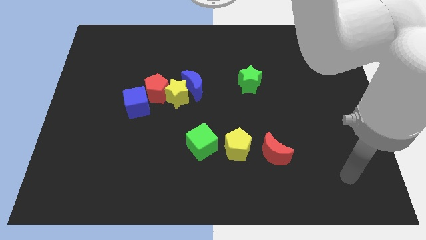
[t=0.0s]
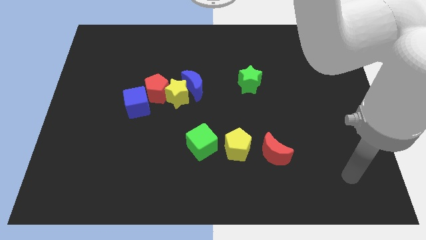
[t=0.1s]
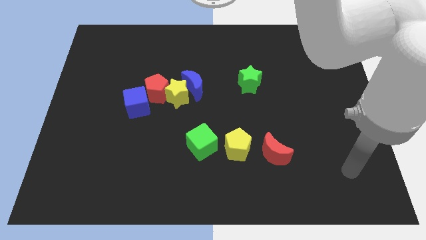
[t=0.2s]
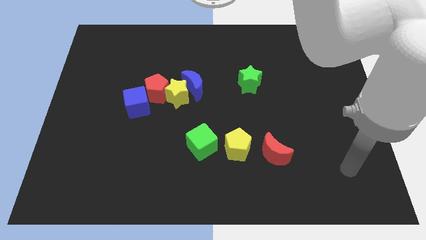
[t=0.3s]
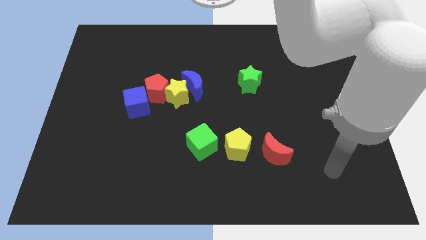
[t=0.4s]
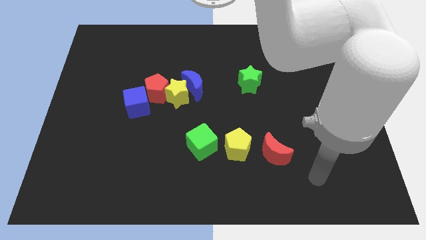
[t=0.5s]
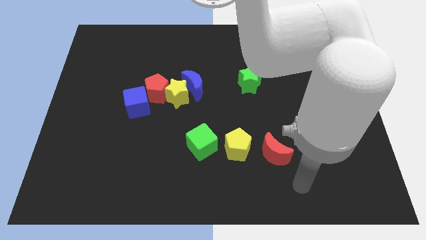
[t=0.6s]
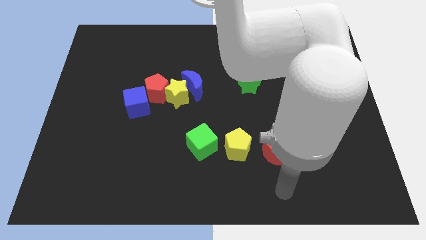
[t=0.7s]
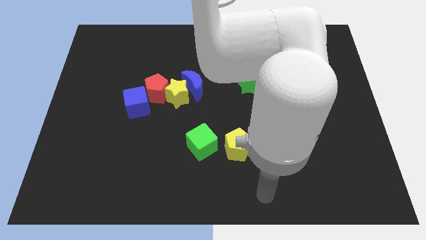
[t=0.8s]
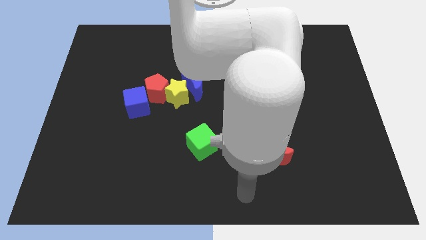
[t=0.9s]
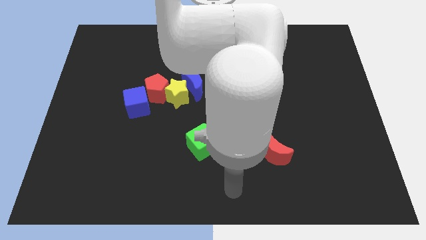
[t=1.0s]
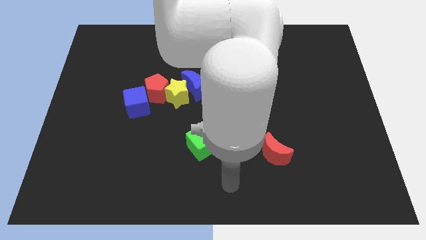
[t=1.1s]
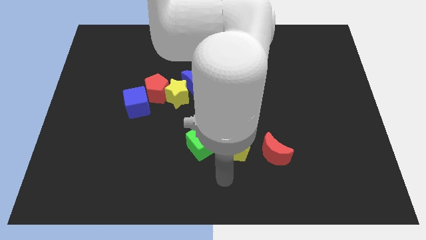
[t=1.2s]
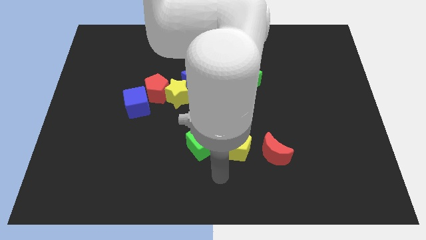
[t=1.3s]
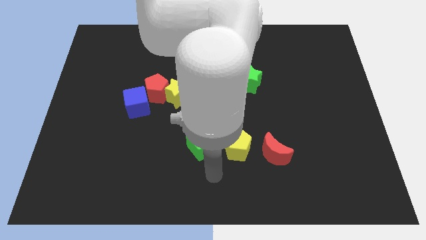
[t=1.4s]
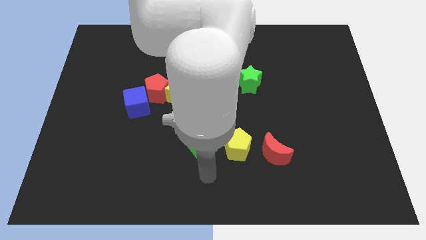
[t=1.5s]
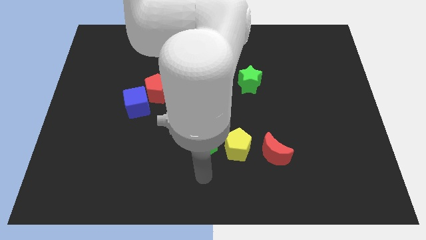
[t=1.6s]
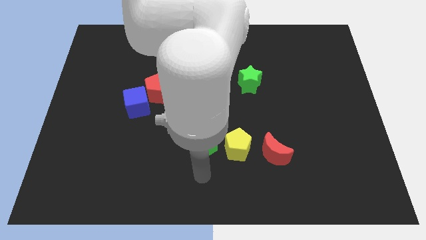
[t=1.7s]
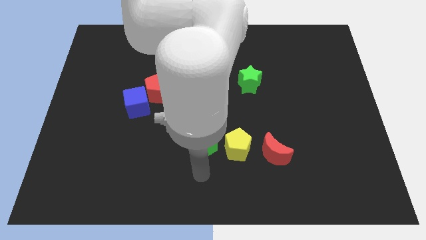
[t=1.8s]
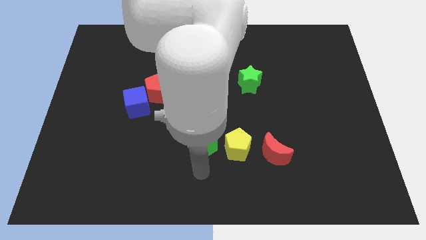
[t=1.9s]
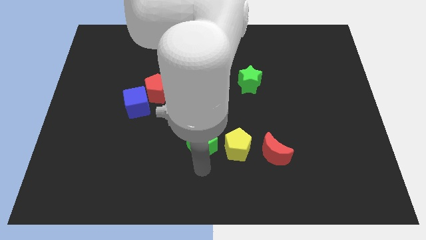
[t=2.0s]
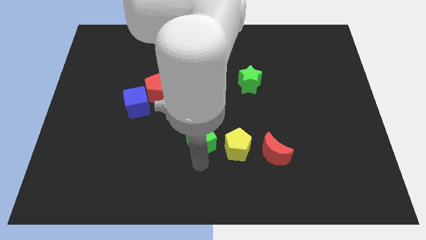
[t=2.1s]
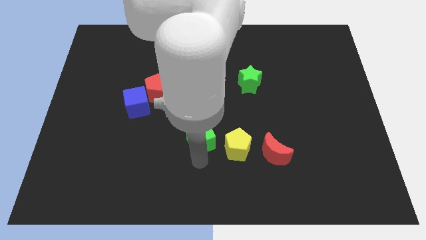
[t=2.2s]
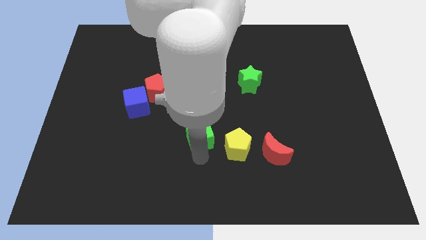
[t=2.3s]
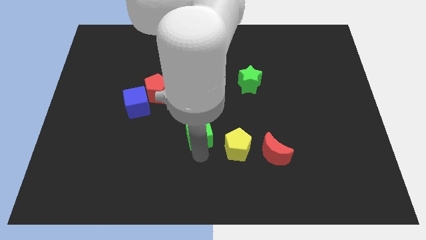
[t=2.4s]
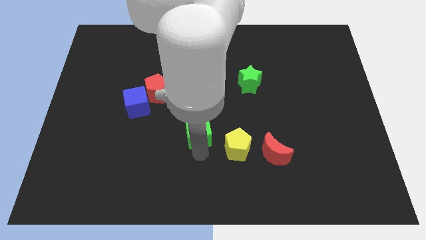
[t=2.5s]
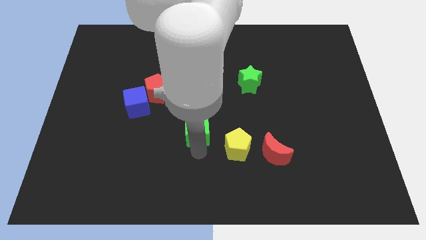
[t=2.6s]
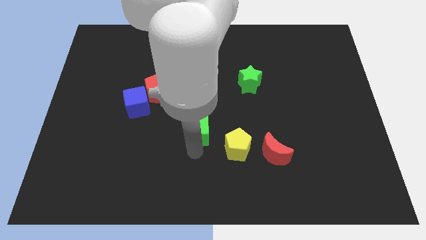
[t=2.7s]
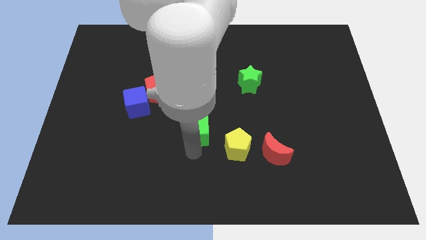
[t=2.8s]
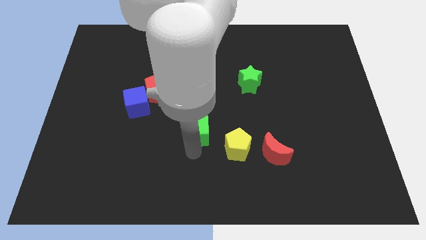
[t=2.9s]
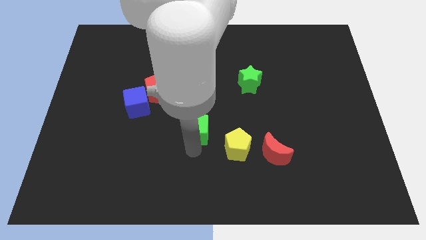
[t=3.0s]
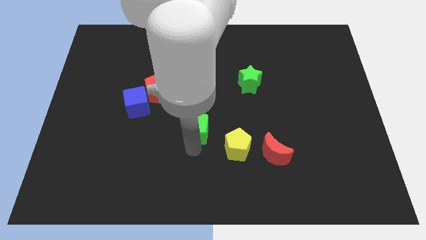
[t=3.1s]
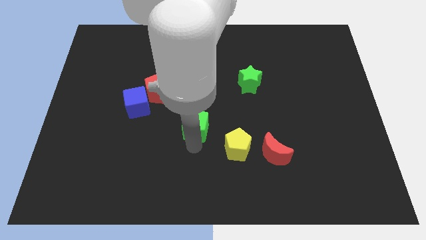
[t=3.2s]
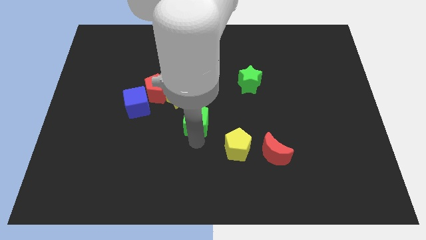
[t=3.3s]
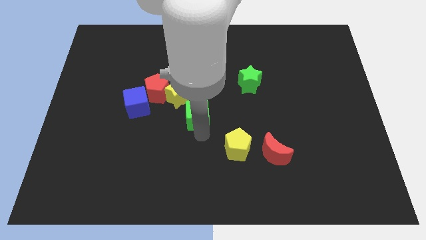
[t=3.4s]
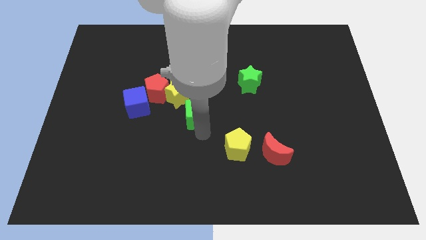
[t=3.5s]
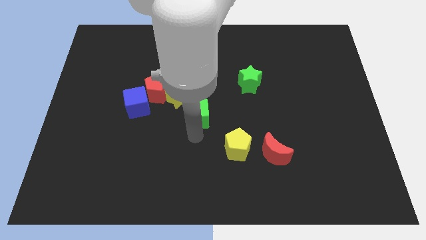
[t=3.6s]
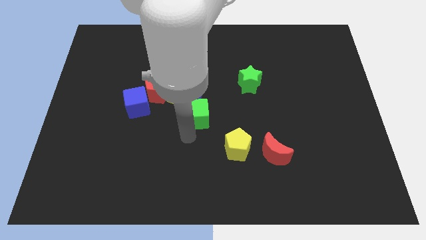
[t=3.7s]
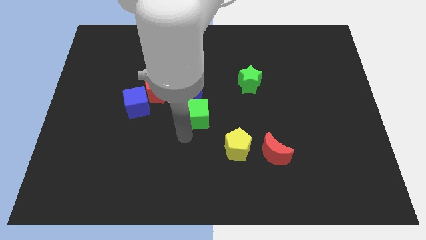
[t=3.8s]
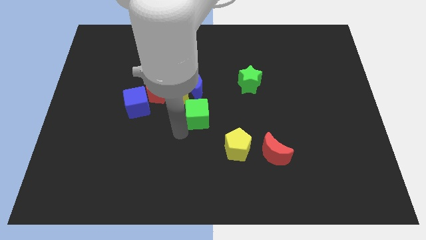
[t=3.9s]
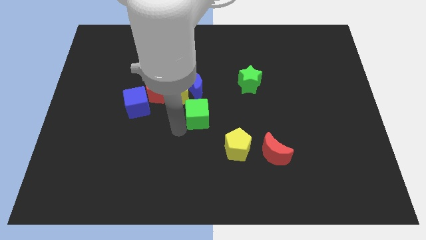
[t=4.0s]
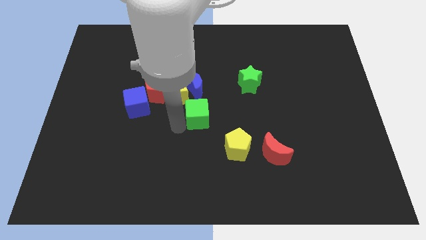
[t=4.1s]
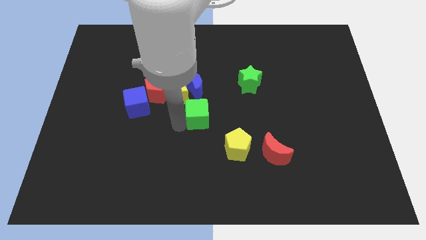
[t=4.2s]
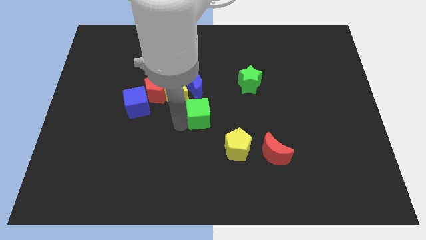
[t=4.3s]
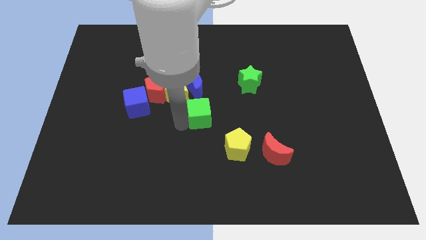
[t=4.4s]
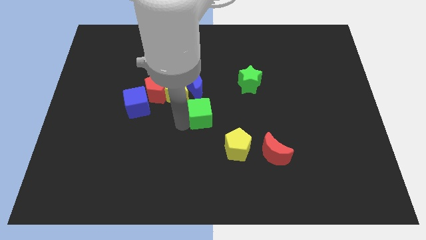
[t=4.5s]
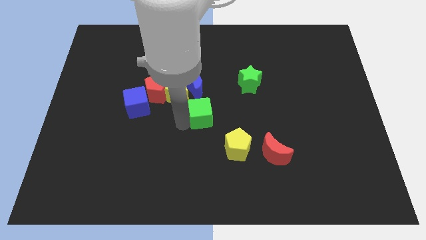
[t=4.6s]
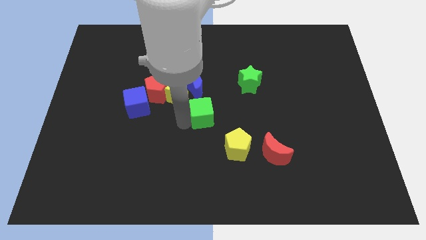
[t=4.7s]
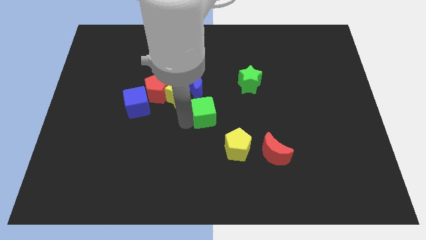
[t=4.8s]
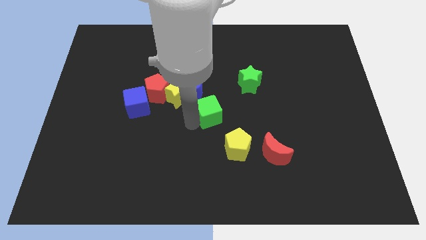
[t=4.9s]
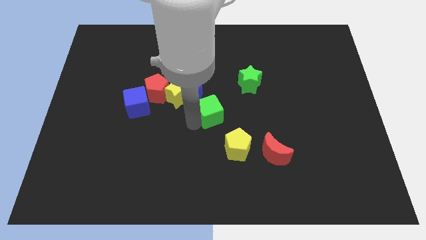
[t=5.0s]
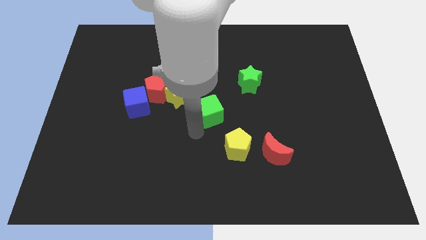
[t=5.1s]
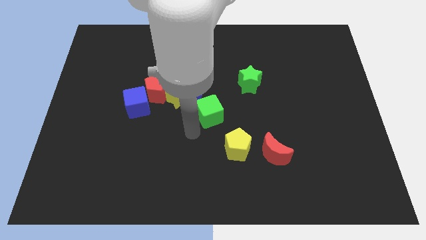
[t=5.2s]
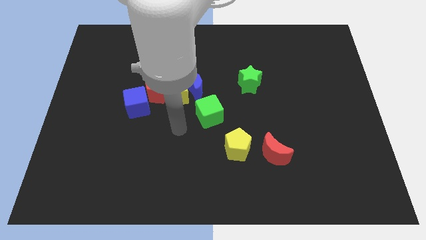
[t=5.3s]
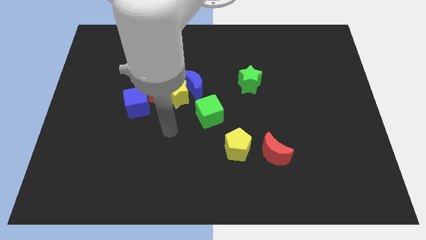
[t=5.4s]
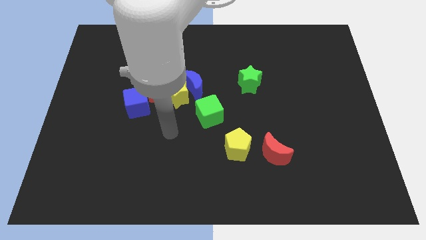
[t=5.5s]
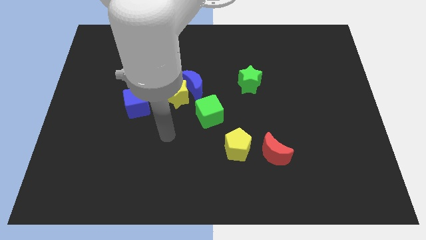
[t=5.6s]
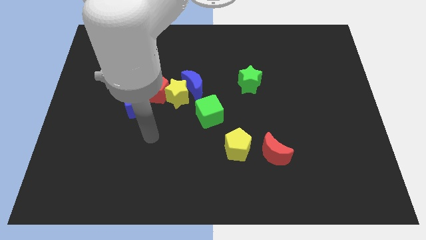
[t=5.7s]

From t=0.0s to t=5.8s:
move the arm to the green cube

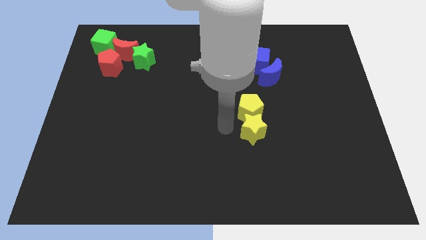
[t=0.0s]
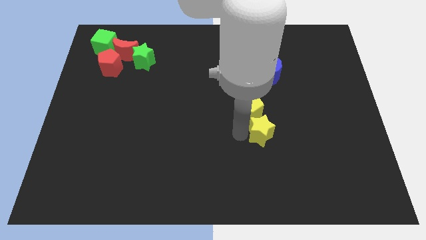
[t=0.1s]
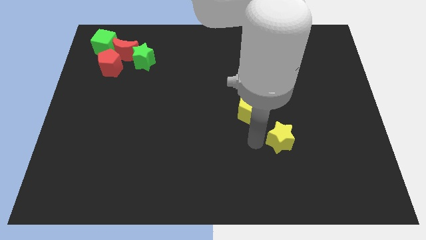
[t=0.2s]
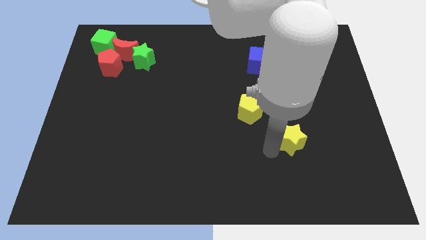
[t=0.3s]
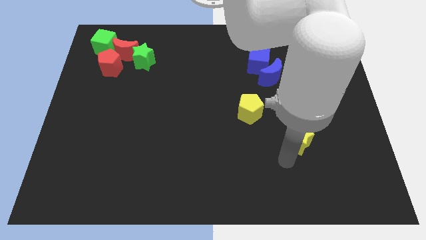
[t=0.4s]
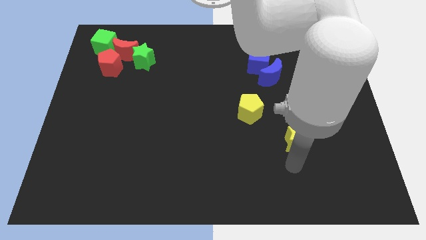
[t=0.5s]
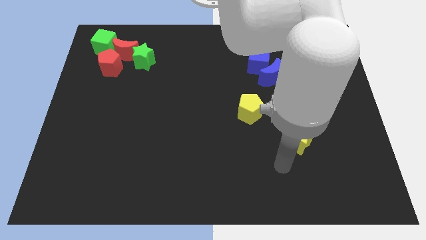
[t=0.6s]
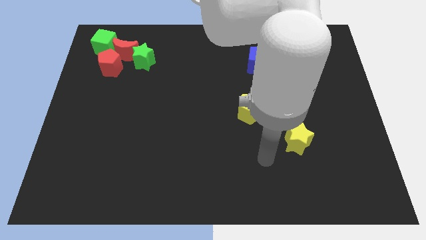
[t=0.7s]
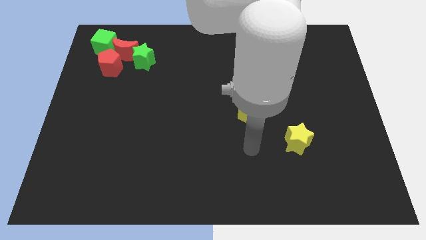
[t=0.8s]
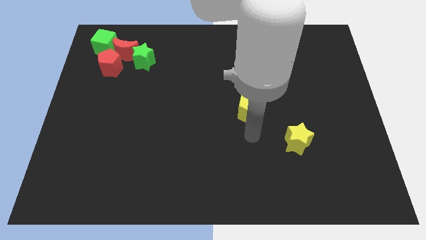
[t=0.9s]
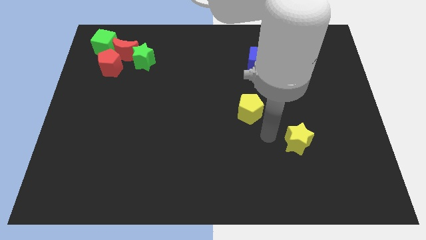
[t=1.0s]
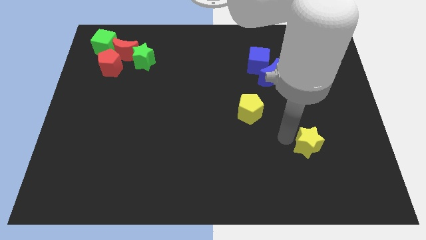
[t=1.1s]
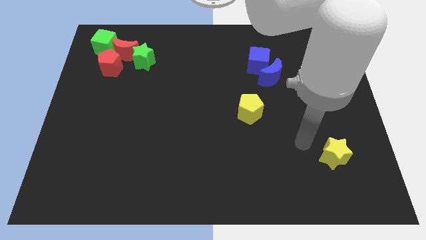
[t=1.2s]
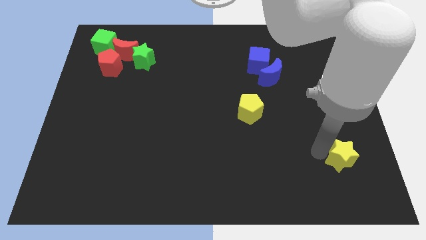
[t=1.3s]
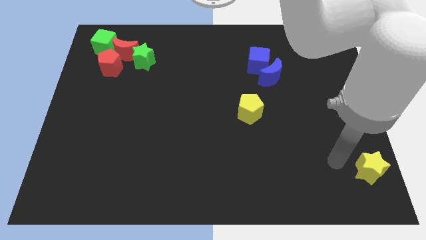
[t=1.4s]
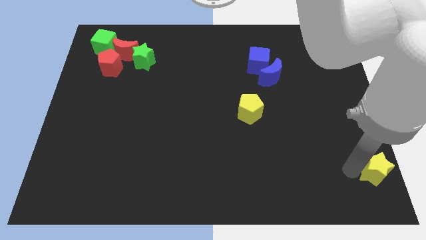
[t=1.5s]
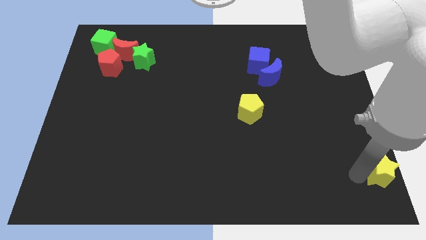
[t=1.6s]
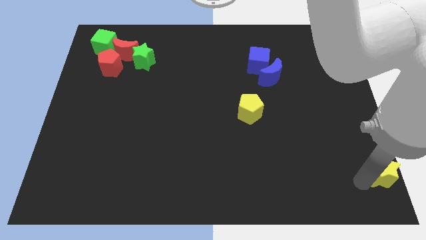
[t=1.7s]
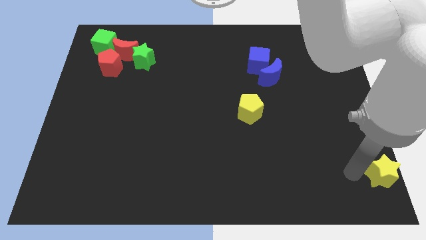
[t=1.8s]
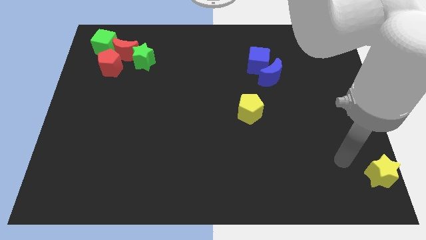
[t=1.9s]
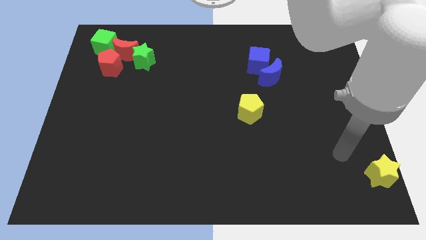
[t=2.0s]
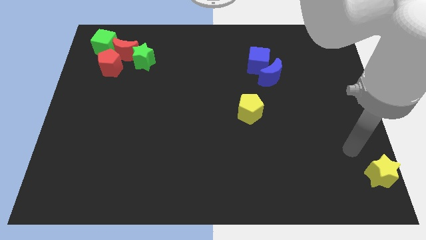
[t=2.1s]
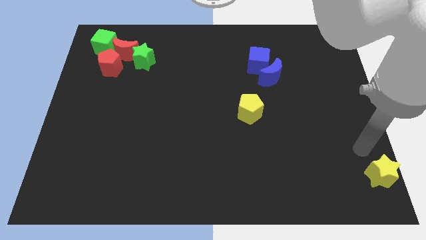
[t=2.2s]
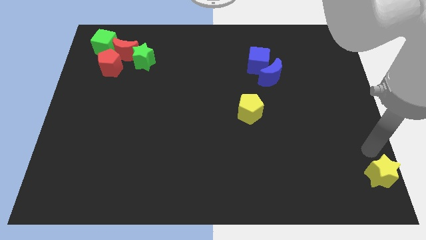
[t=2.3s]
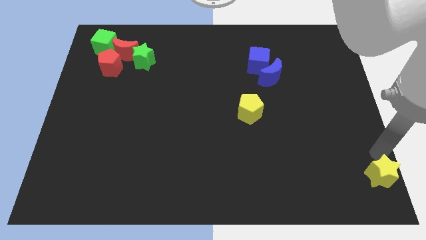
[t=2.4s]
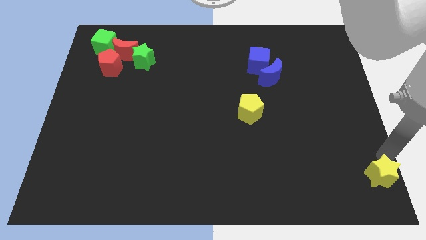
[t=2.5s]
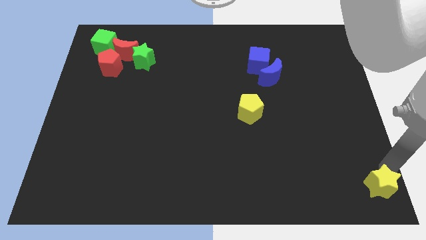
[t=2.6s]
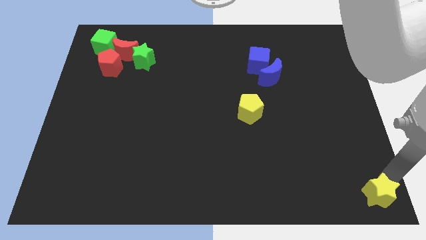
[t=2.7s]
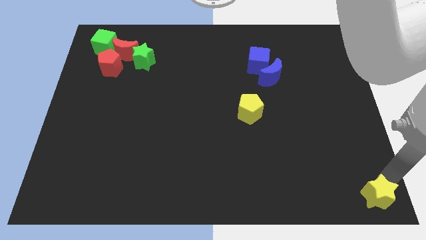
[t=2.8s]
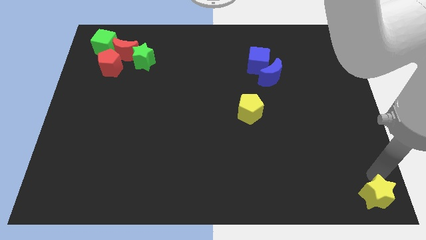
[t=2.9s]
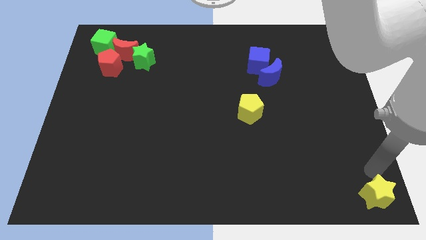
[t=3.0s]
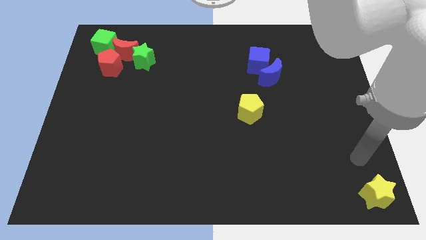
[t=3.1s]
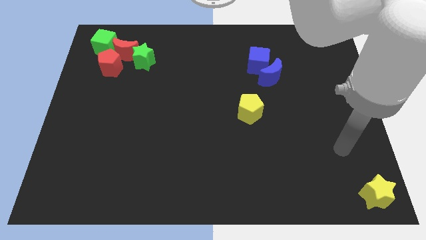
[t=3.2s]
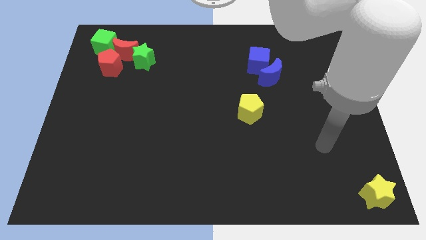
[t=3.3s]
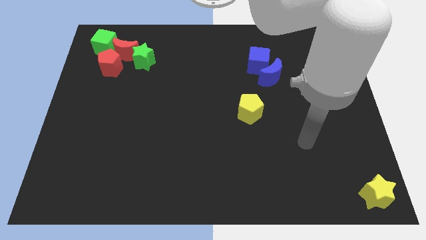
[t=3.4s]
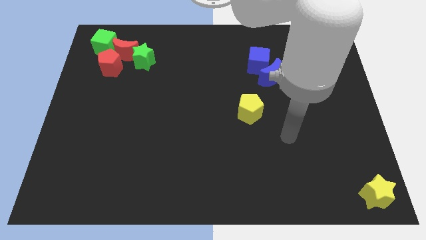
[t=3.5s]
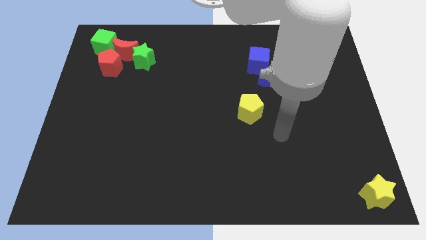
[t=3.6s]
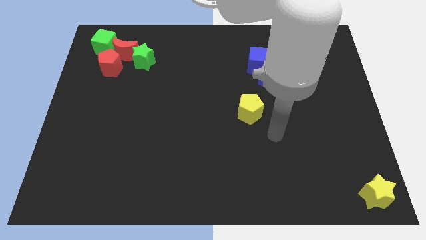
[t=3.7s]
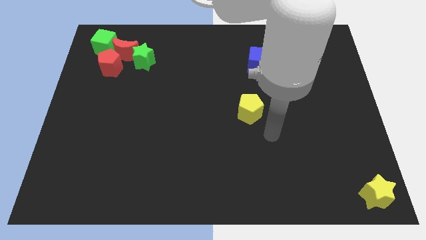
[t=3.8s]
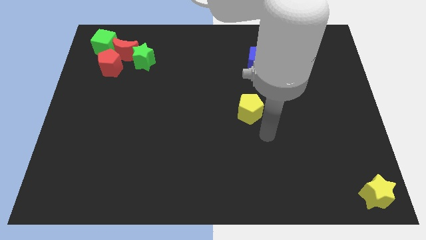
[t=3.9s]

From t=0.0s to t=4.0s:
move the yellow star to the bottom right corner of the board
